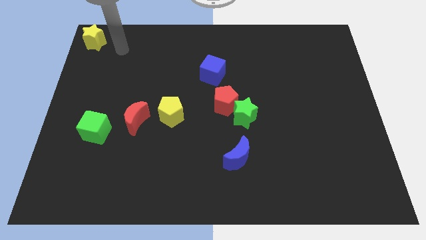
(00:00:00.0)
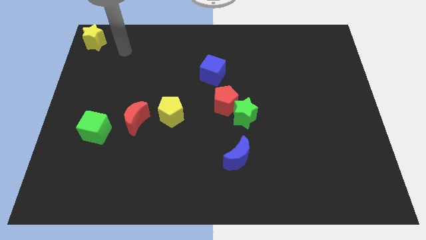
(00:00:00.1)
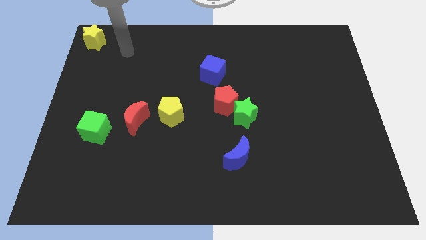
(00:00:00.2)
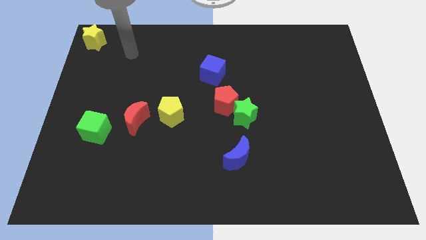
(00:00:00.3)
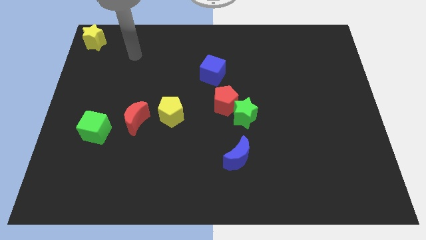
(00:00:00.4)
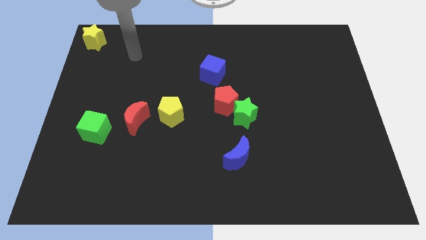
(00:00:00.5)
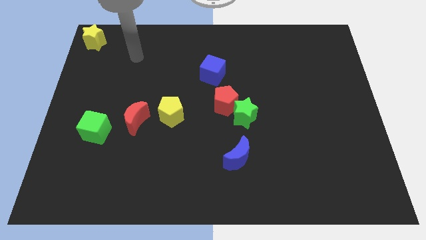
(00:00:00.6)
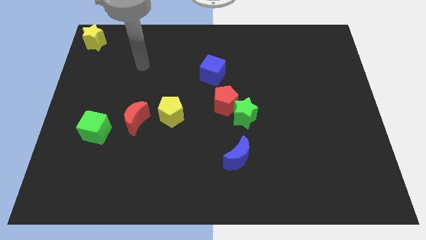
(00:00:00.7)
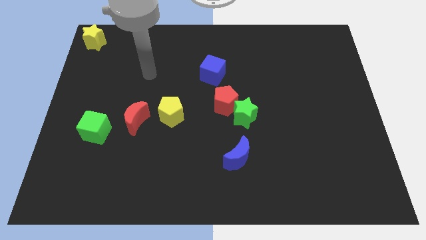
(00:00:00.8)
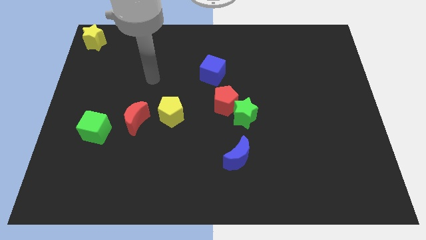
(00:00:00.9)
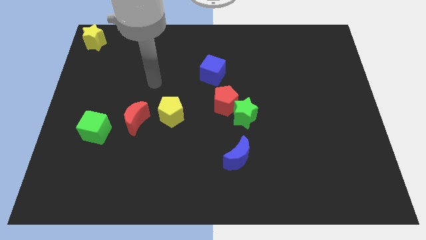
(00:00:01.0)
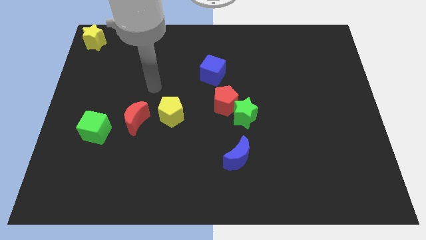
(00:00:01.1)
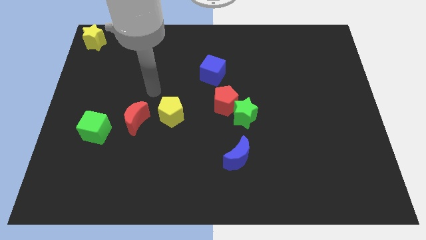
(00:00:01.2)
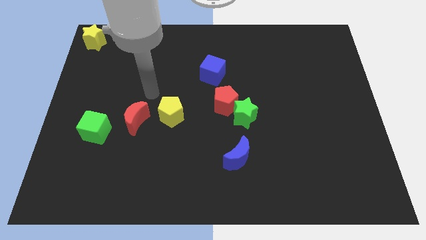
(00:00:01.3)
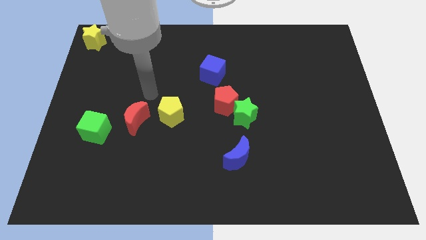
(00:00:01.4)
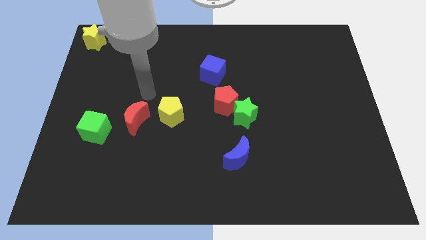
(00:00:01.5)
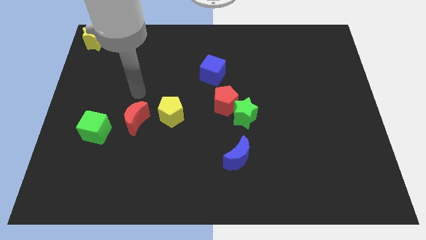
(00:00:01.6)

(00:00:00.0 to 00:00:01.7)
point your arm above the red moon

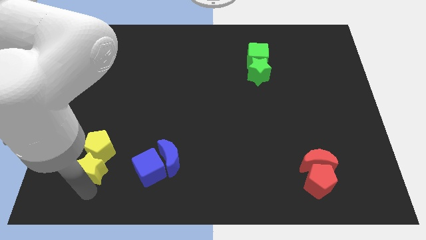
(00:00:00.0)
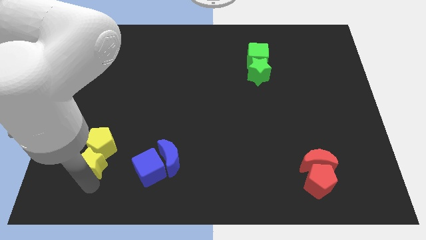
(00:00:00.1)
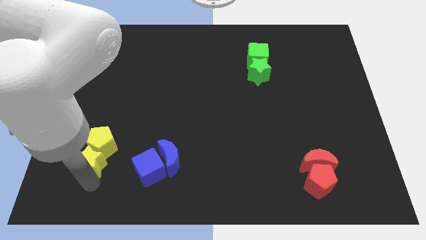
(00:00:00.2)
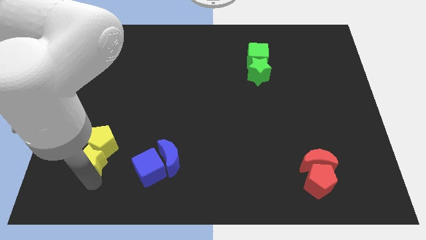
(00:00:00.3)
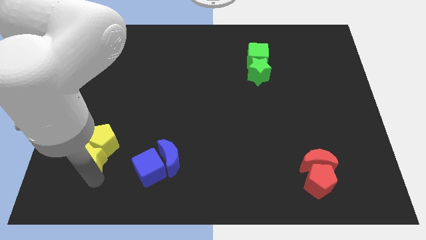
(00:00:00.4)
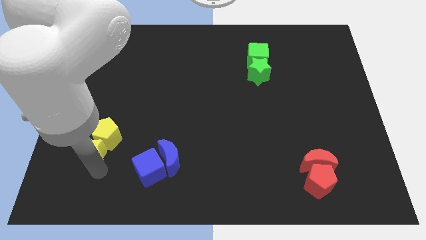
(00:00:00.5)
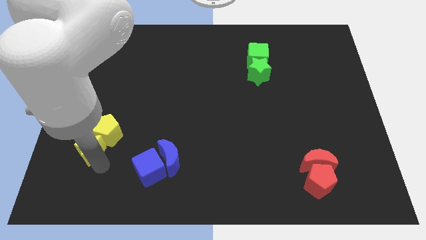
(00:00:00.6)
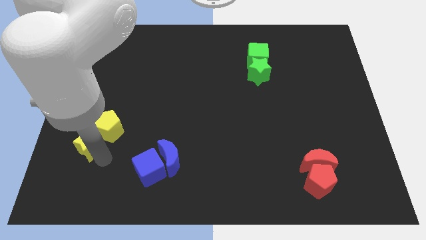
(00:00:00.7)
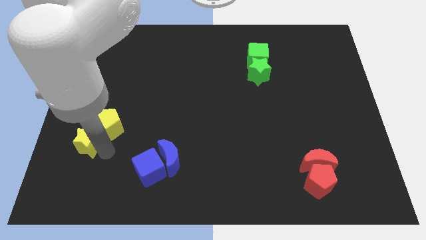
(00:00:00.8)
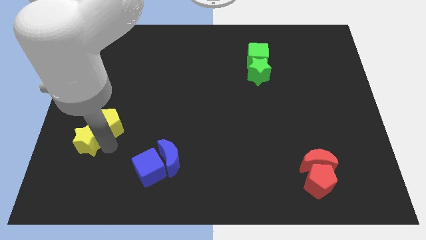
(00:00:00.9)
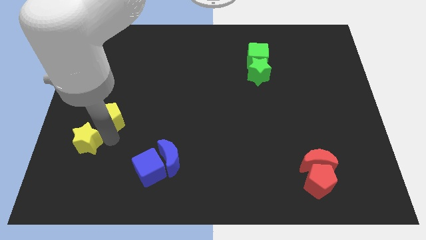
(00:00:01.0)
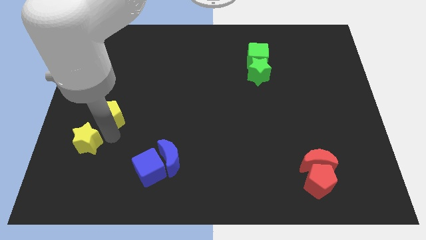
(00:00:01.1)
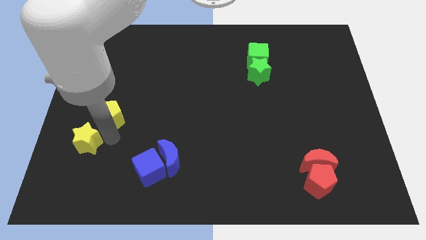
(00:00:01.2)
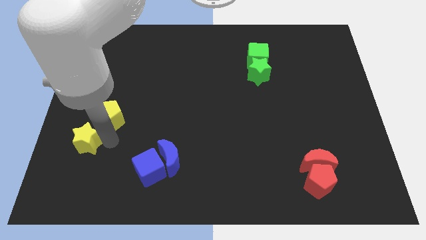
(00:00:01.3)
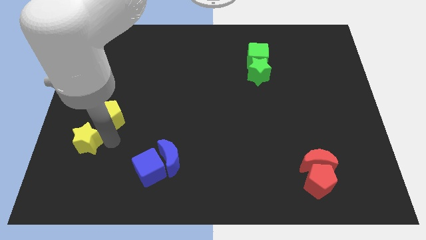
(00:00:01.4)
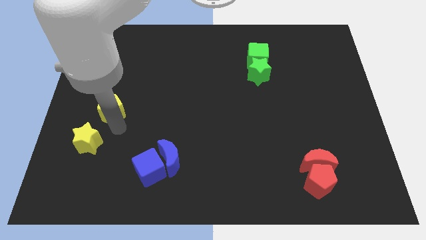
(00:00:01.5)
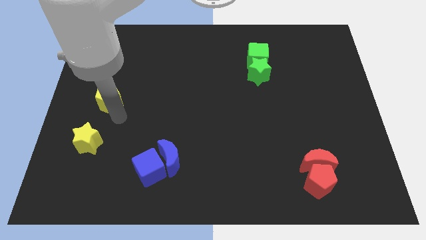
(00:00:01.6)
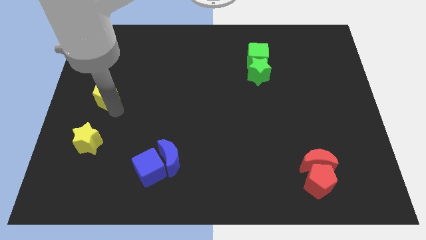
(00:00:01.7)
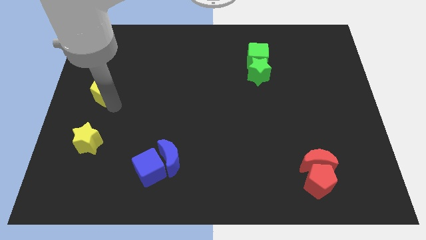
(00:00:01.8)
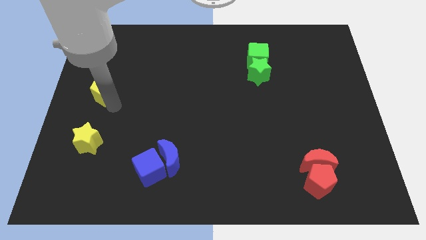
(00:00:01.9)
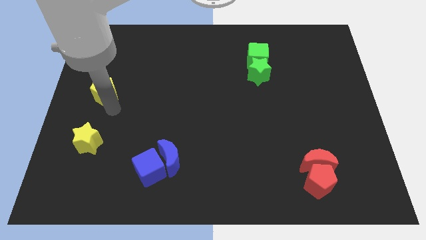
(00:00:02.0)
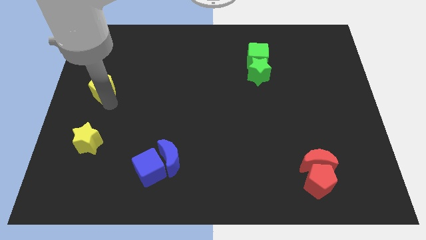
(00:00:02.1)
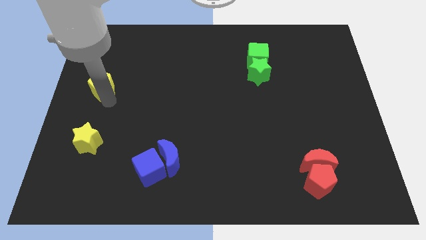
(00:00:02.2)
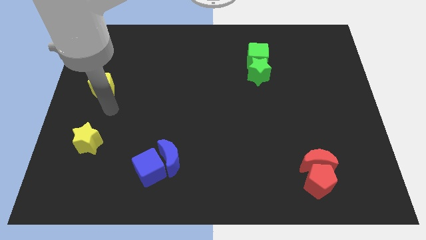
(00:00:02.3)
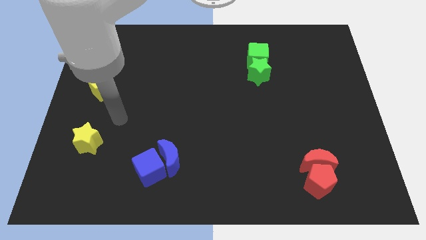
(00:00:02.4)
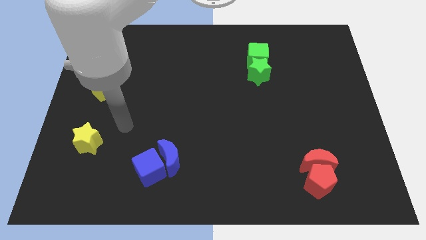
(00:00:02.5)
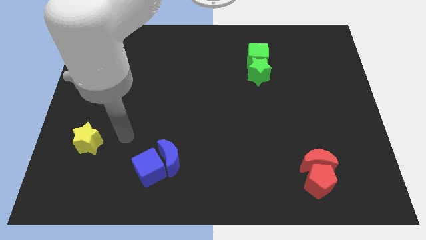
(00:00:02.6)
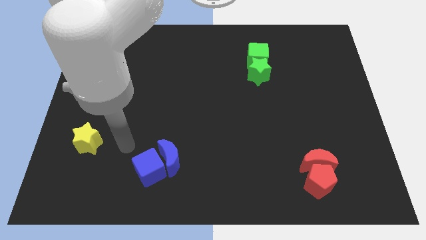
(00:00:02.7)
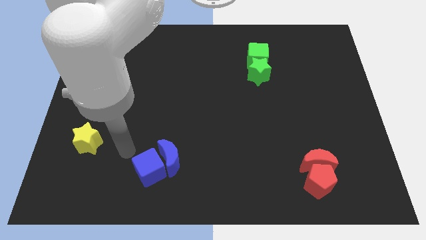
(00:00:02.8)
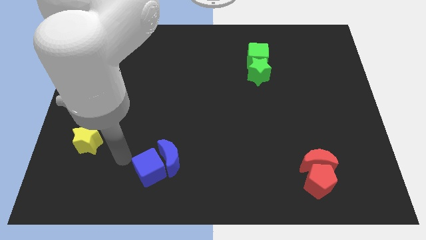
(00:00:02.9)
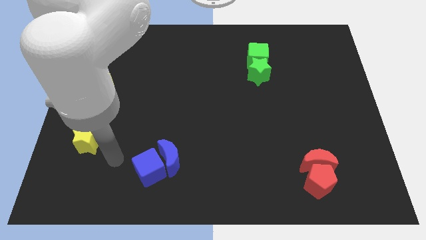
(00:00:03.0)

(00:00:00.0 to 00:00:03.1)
push yellow pentagon towards center left

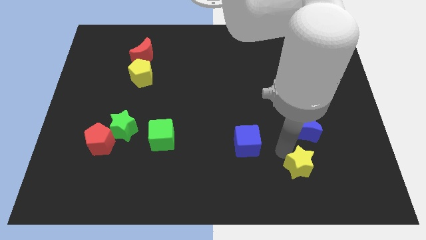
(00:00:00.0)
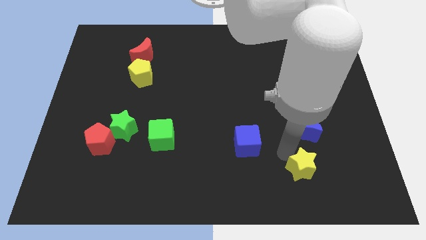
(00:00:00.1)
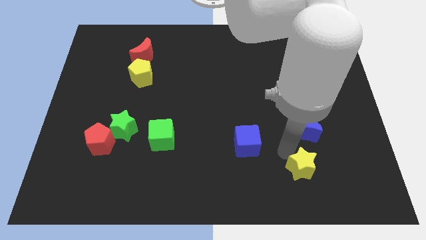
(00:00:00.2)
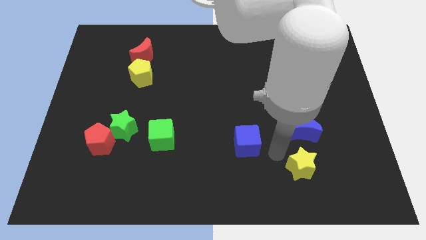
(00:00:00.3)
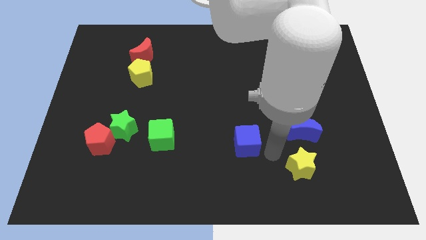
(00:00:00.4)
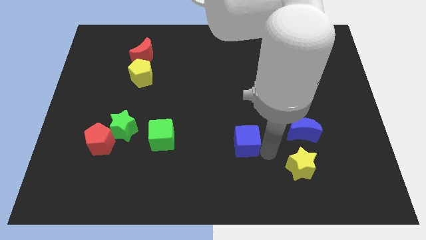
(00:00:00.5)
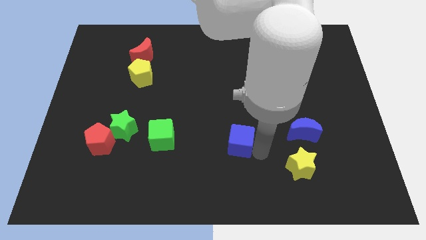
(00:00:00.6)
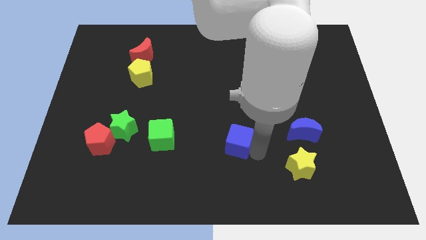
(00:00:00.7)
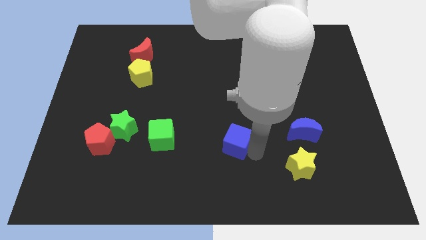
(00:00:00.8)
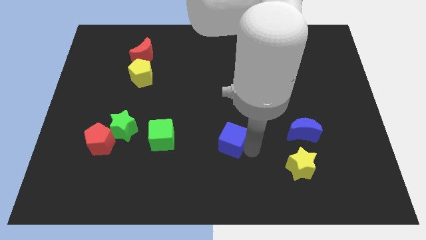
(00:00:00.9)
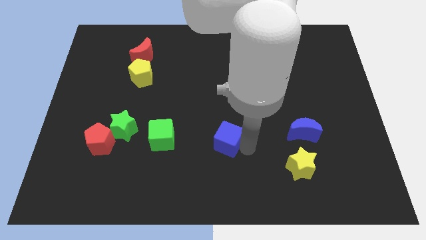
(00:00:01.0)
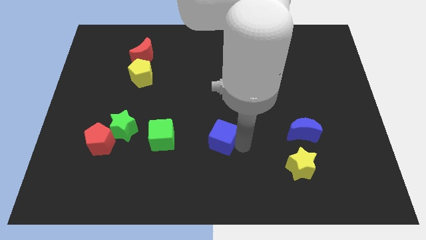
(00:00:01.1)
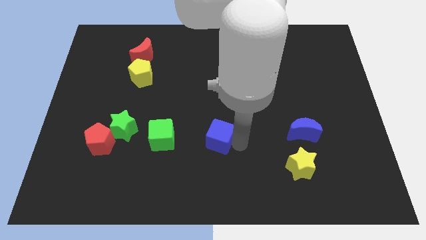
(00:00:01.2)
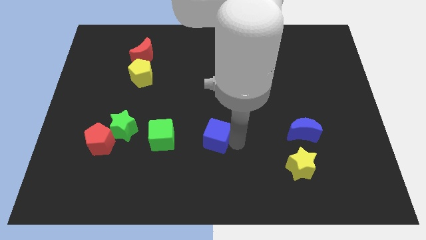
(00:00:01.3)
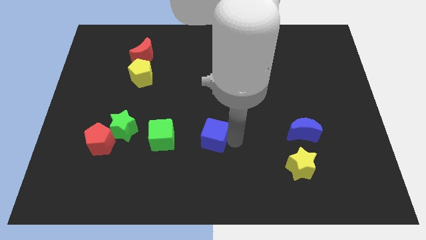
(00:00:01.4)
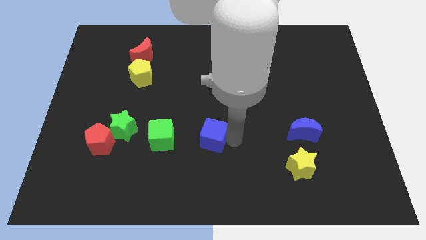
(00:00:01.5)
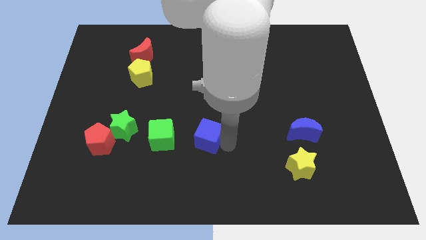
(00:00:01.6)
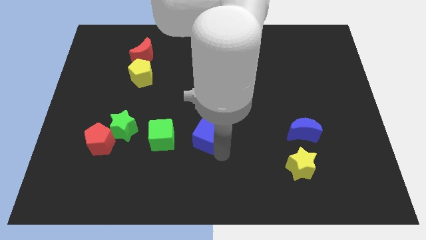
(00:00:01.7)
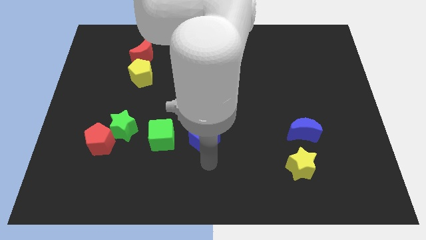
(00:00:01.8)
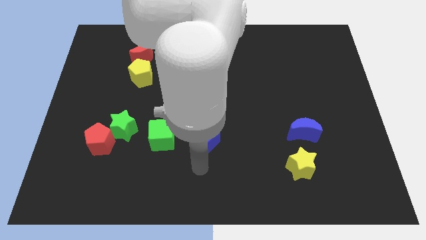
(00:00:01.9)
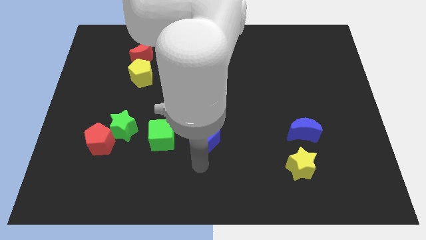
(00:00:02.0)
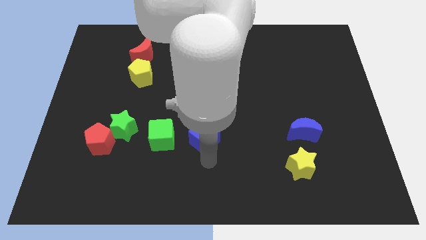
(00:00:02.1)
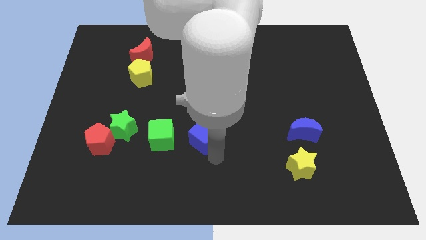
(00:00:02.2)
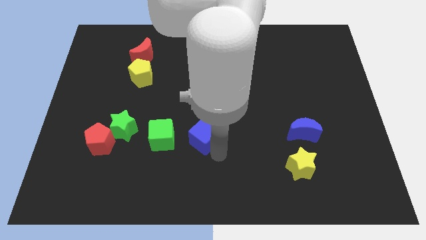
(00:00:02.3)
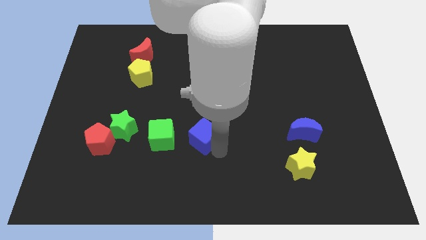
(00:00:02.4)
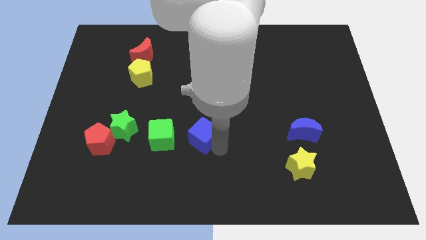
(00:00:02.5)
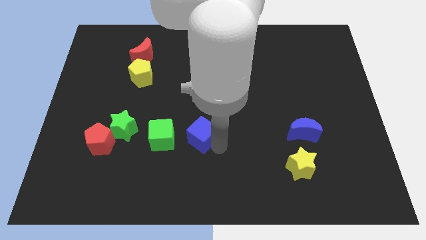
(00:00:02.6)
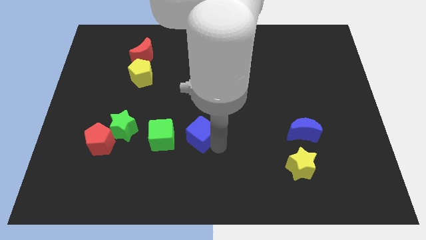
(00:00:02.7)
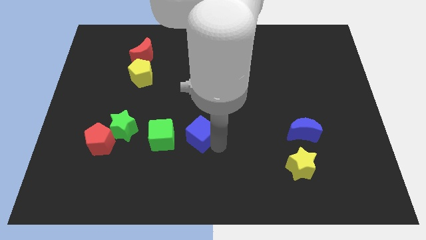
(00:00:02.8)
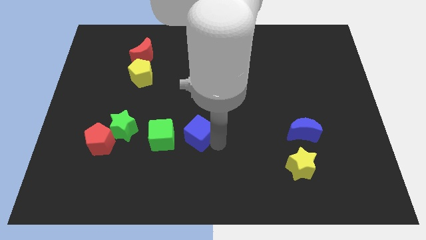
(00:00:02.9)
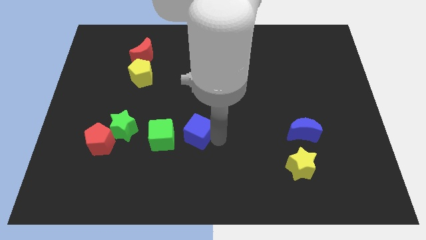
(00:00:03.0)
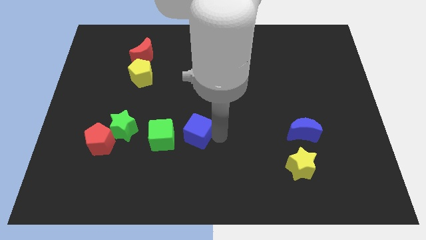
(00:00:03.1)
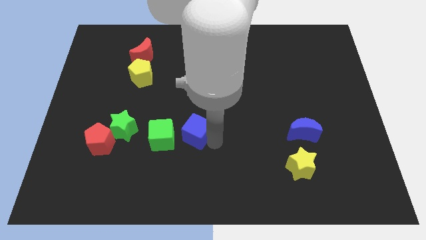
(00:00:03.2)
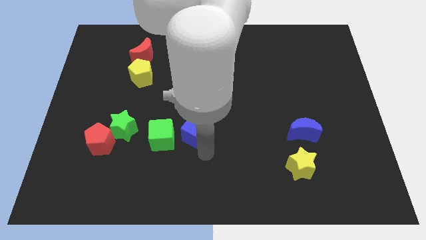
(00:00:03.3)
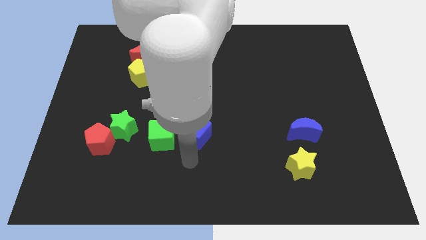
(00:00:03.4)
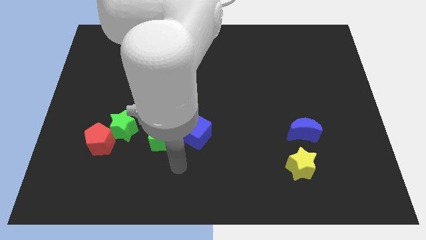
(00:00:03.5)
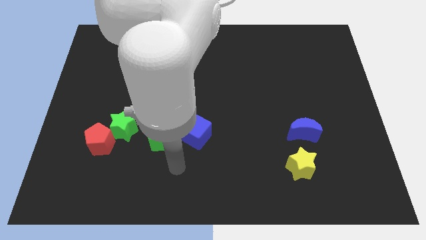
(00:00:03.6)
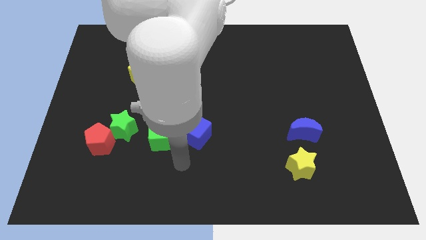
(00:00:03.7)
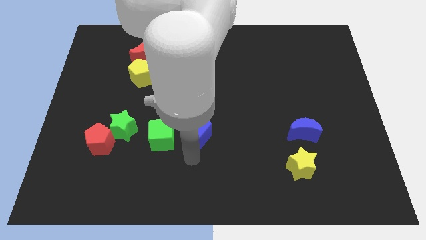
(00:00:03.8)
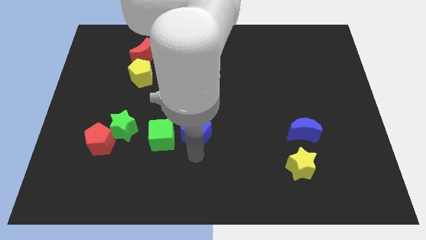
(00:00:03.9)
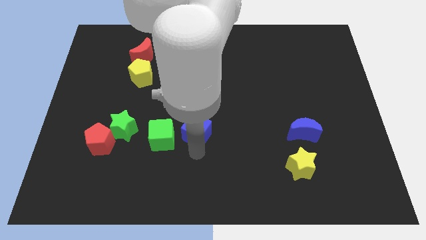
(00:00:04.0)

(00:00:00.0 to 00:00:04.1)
place blue cube close to green cube
